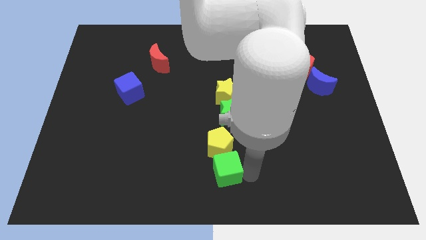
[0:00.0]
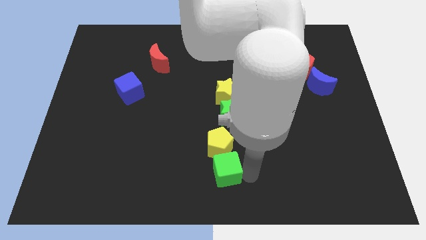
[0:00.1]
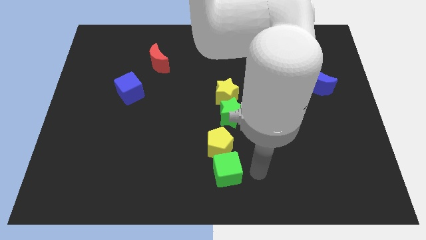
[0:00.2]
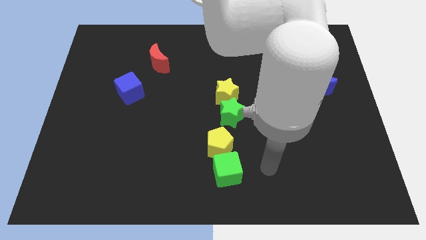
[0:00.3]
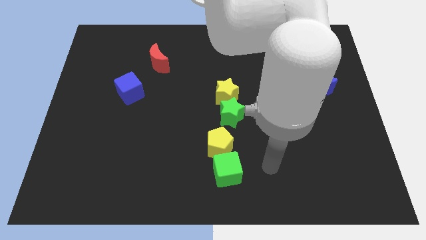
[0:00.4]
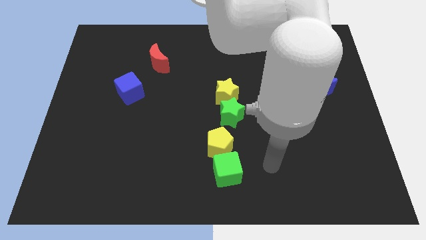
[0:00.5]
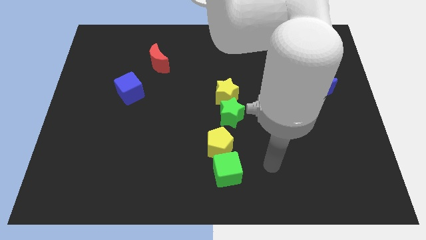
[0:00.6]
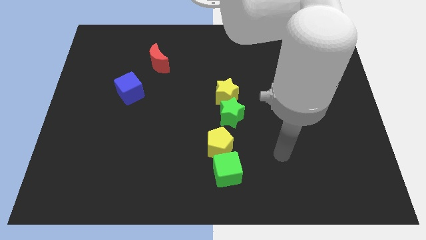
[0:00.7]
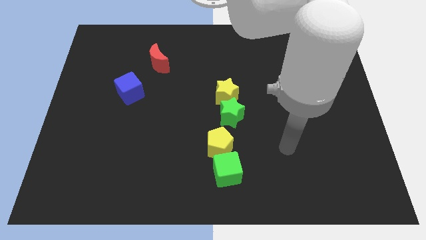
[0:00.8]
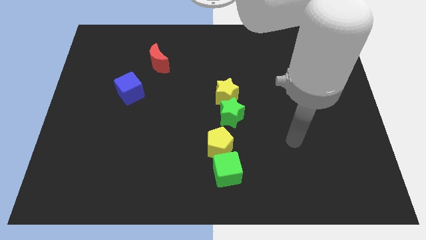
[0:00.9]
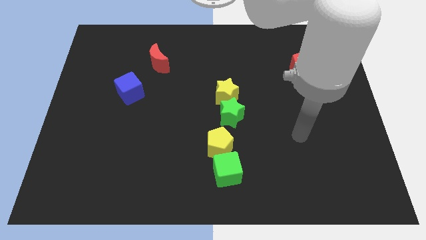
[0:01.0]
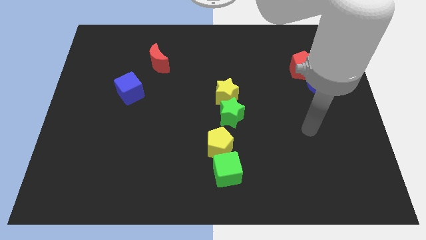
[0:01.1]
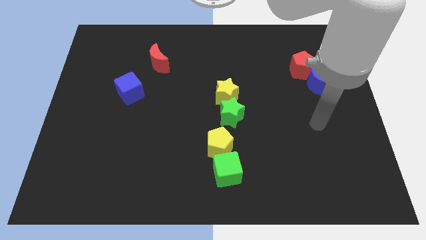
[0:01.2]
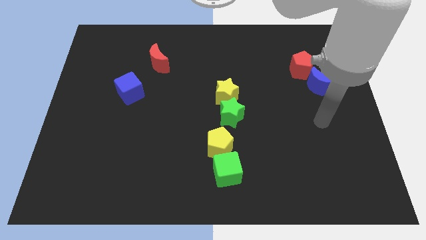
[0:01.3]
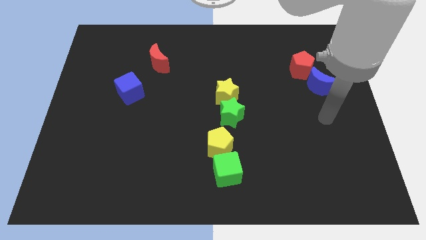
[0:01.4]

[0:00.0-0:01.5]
move your arm away from the green cube

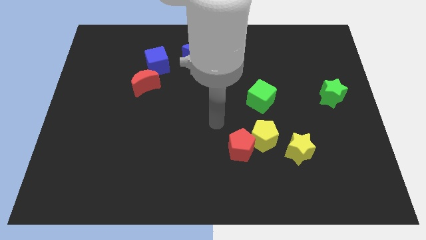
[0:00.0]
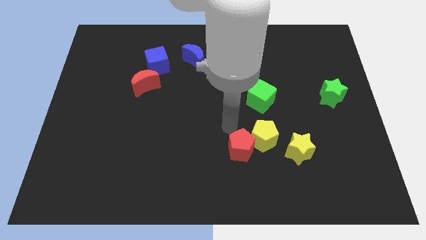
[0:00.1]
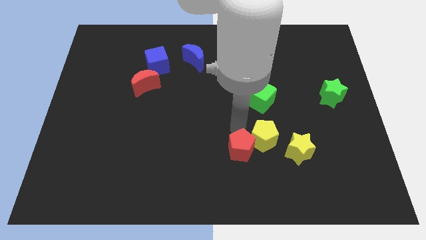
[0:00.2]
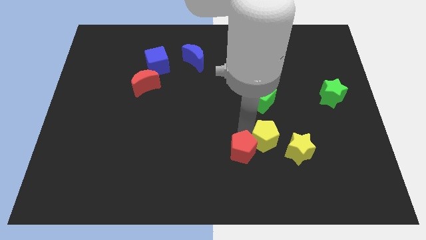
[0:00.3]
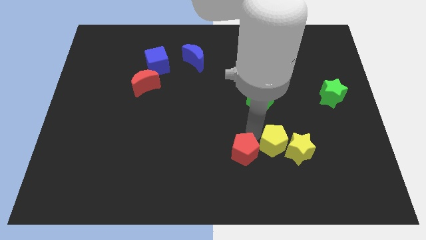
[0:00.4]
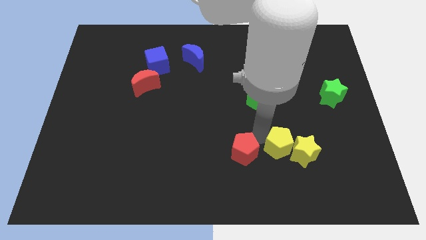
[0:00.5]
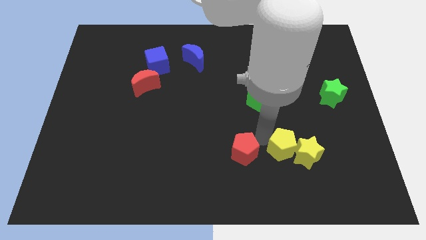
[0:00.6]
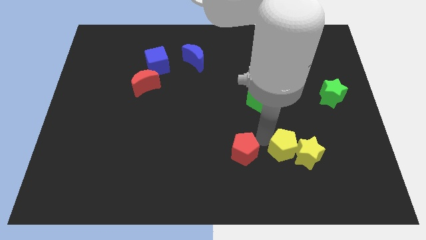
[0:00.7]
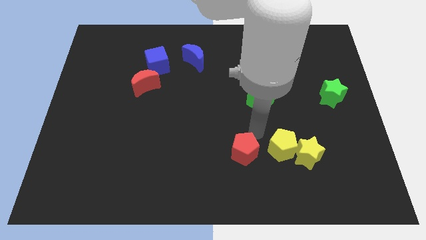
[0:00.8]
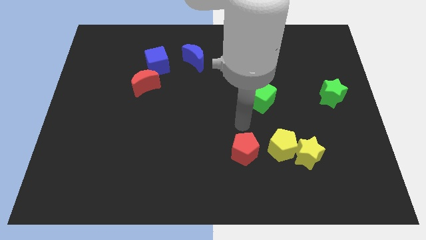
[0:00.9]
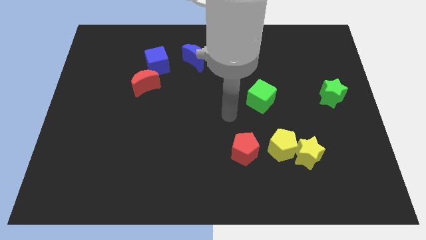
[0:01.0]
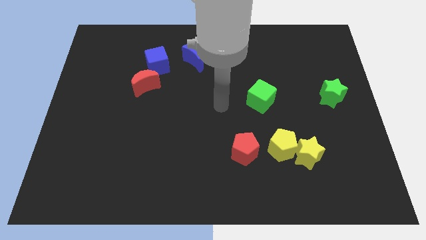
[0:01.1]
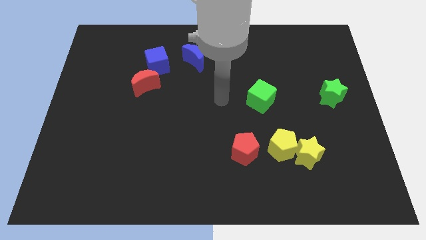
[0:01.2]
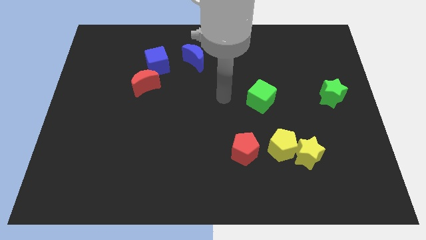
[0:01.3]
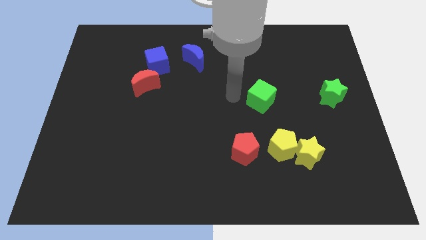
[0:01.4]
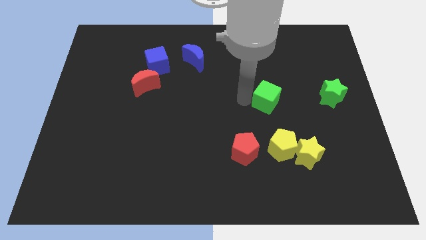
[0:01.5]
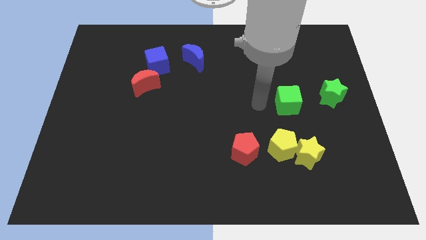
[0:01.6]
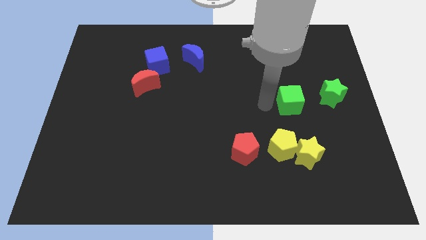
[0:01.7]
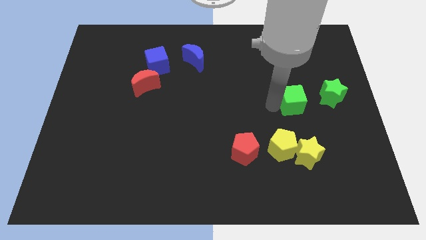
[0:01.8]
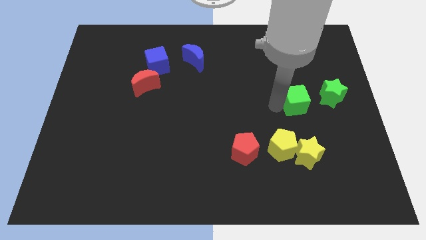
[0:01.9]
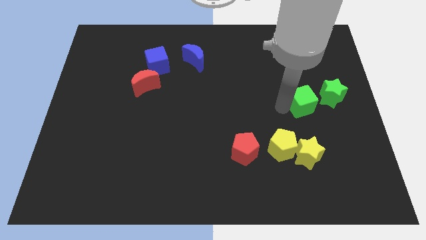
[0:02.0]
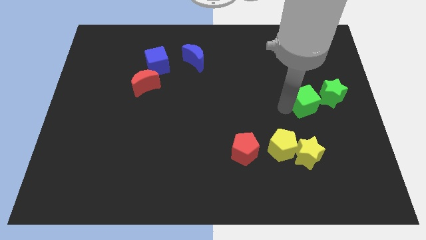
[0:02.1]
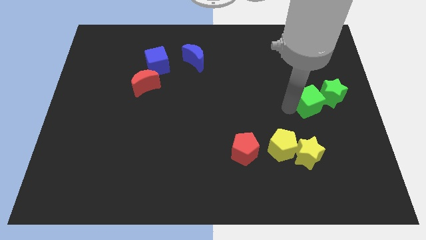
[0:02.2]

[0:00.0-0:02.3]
push the yellow pentagon into the yellow star

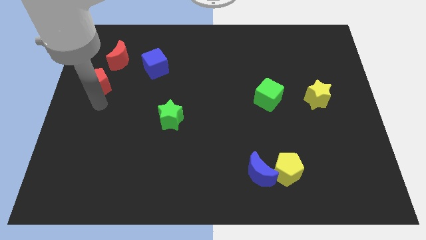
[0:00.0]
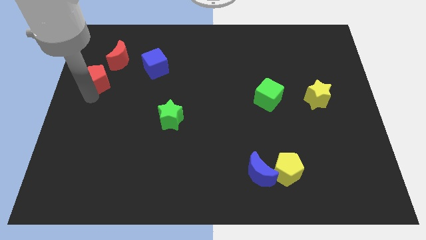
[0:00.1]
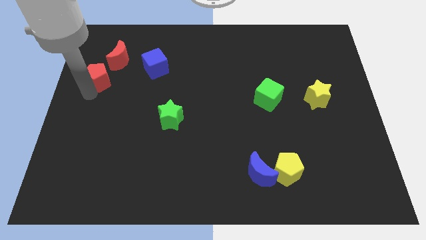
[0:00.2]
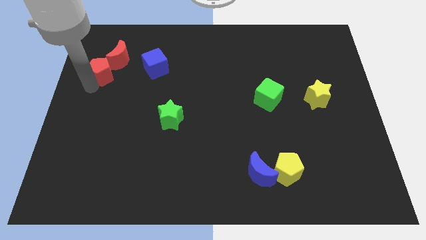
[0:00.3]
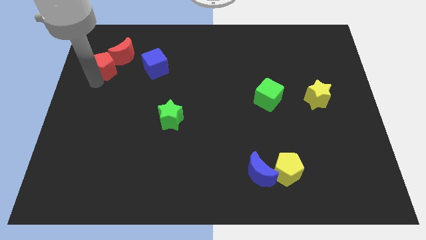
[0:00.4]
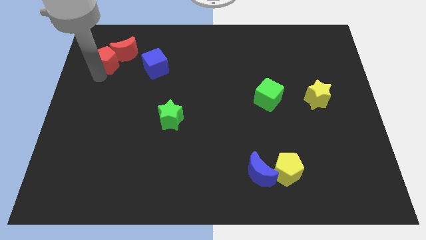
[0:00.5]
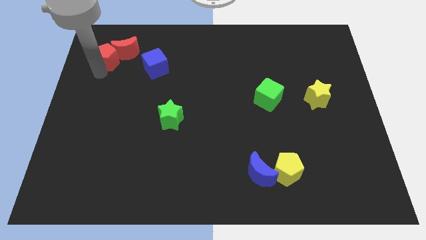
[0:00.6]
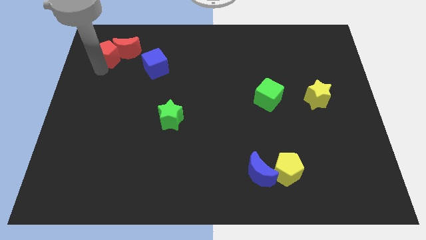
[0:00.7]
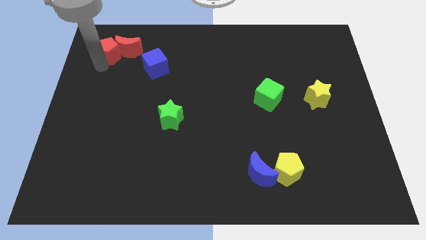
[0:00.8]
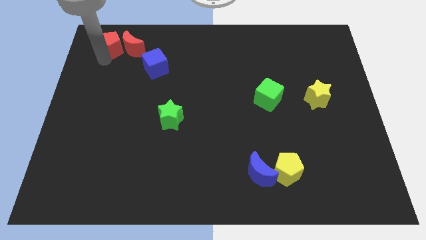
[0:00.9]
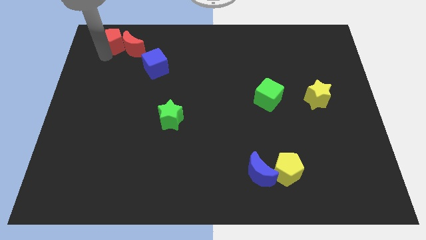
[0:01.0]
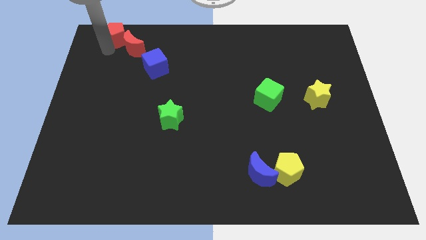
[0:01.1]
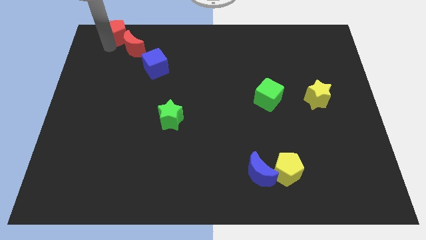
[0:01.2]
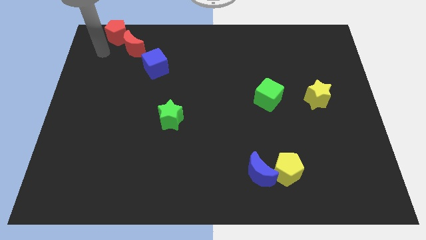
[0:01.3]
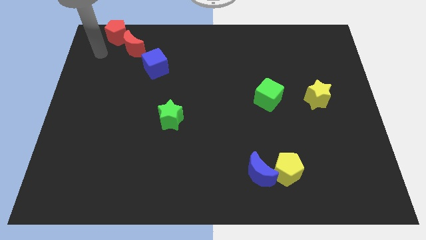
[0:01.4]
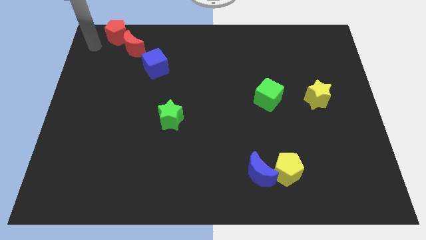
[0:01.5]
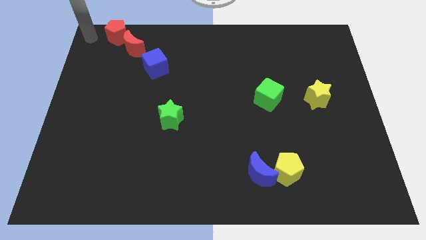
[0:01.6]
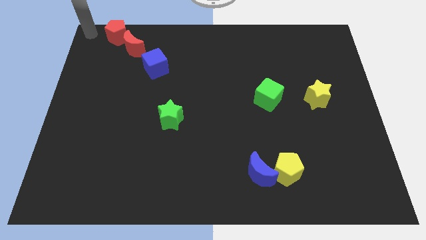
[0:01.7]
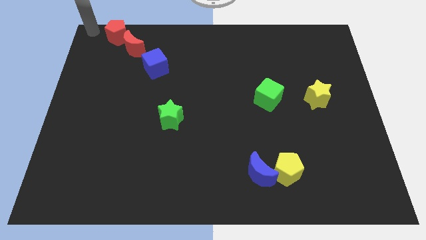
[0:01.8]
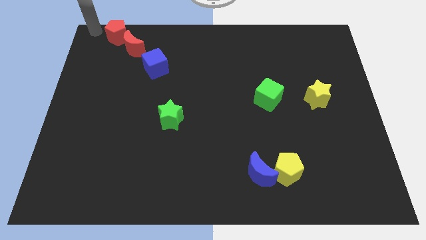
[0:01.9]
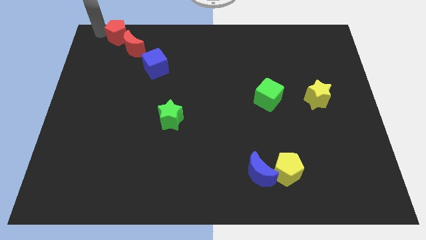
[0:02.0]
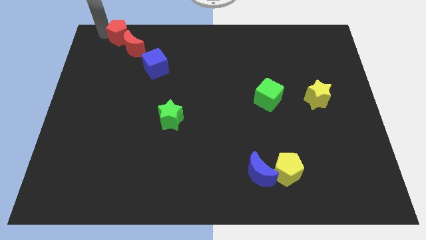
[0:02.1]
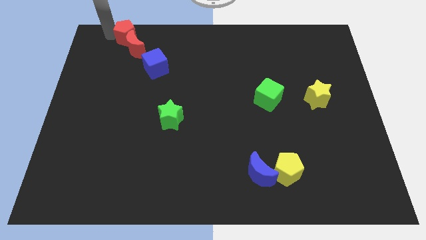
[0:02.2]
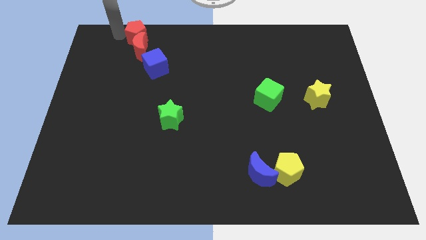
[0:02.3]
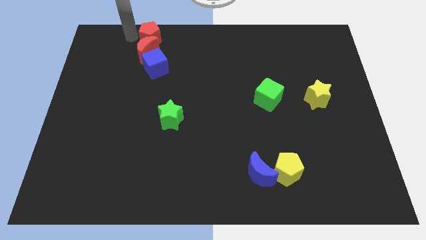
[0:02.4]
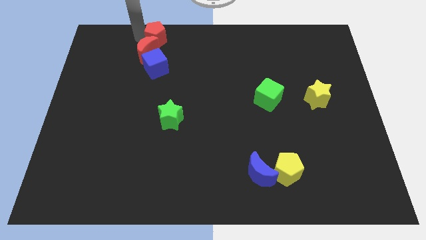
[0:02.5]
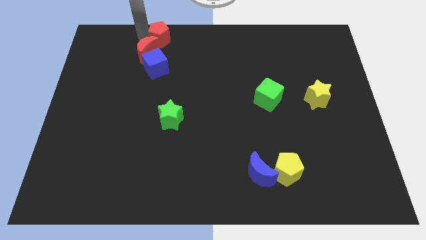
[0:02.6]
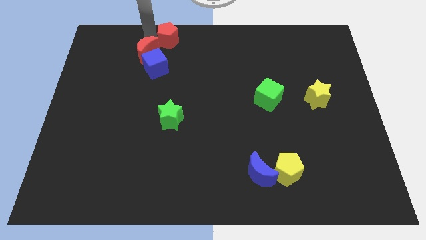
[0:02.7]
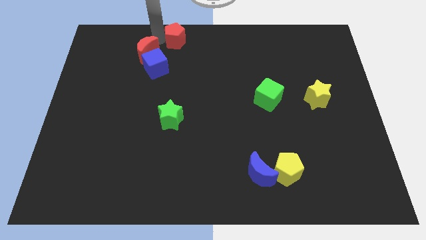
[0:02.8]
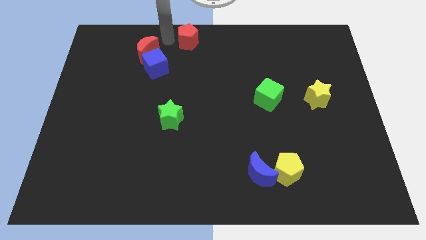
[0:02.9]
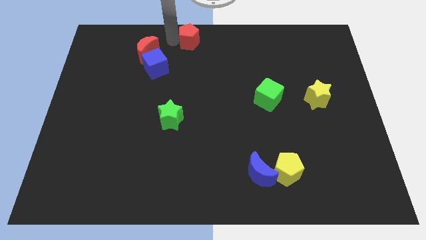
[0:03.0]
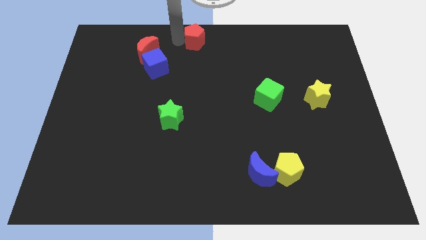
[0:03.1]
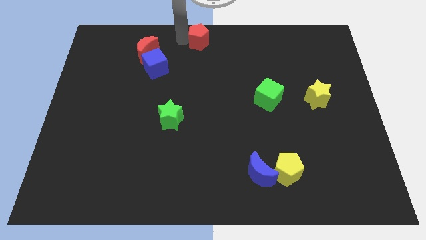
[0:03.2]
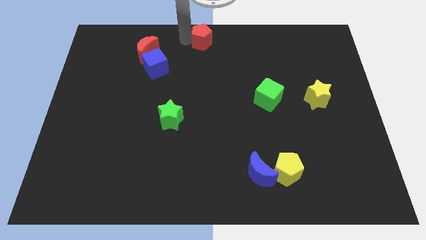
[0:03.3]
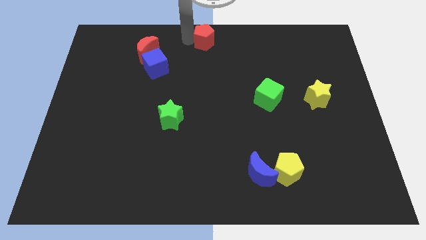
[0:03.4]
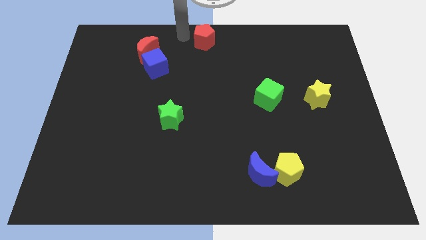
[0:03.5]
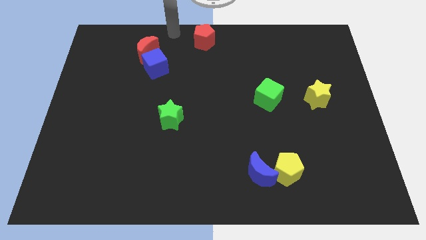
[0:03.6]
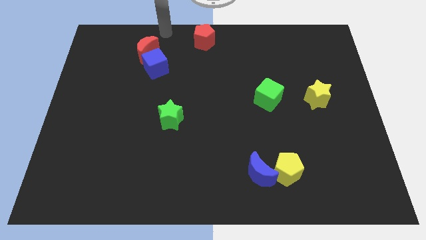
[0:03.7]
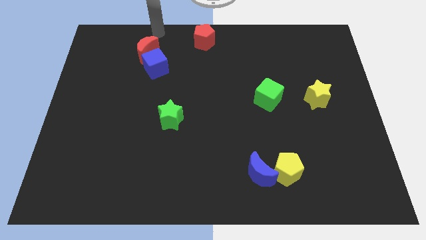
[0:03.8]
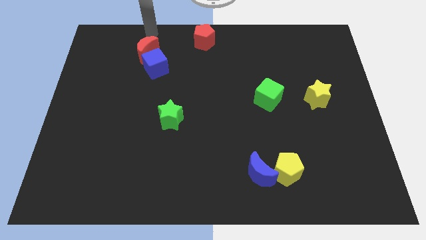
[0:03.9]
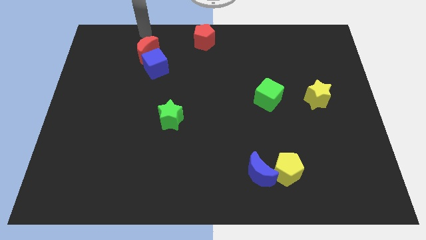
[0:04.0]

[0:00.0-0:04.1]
place the red pentagon at the top center of the board

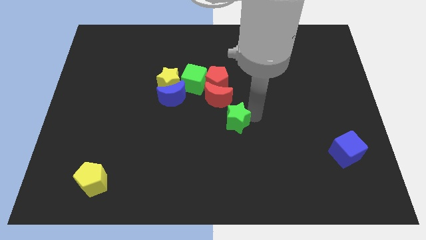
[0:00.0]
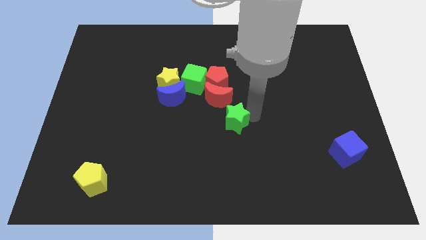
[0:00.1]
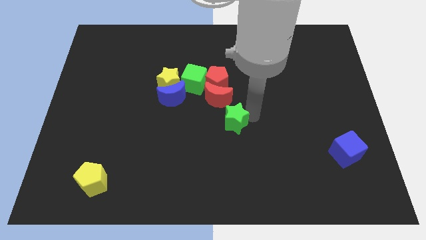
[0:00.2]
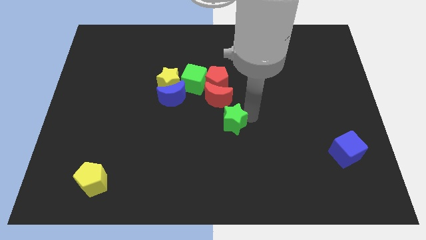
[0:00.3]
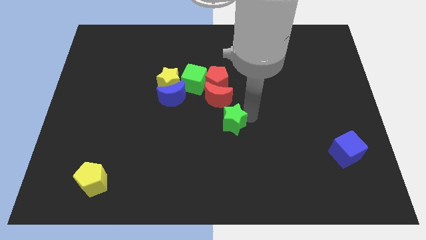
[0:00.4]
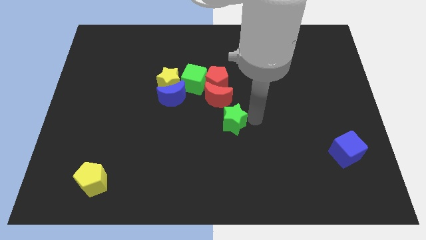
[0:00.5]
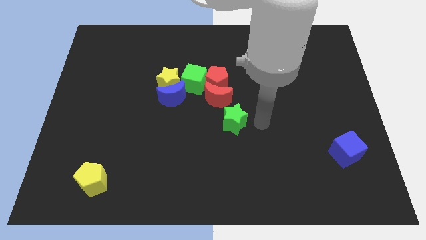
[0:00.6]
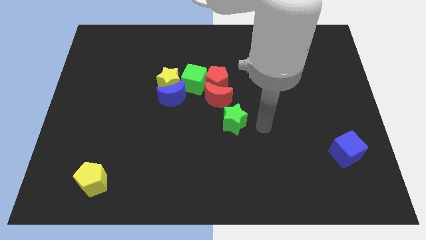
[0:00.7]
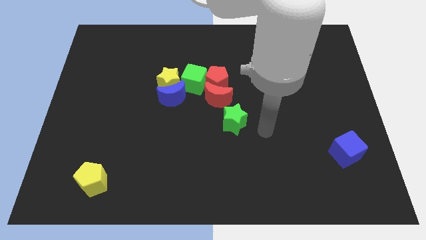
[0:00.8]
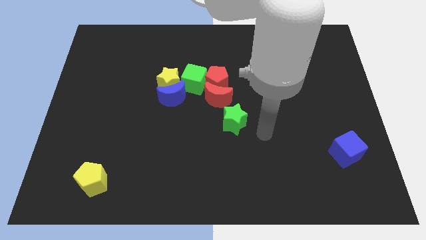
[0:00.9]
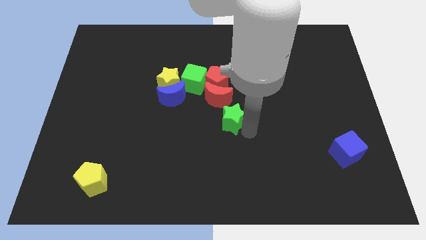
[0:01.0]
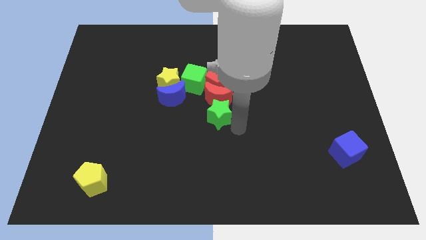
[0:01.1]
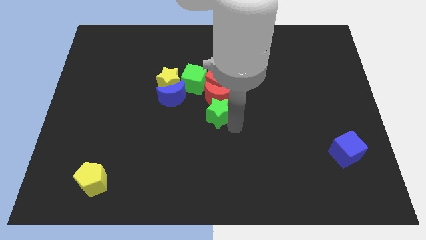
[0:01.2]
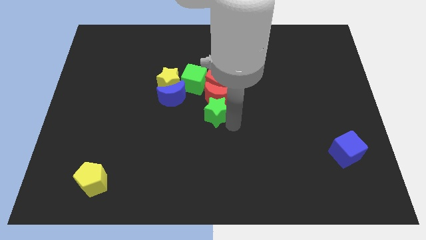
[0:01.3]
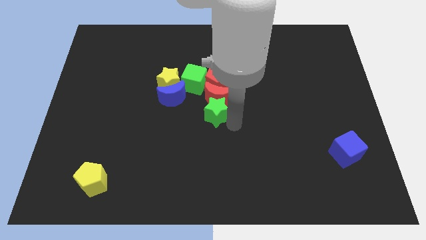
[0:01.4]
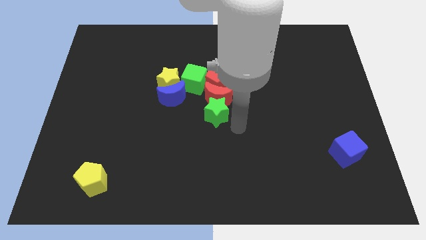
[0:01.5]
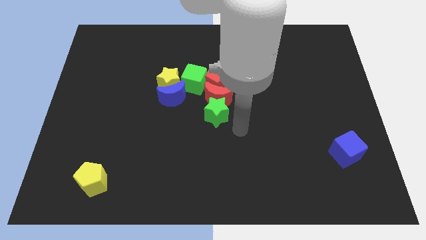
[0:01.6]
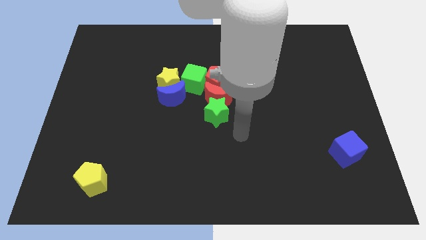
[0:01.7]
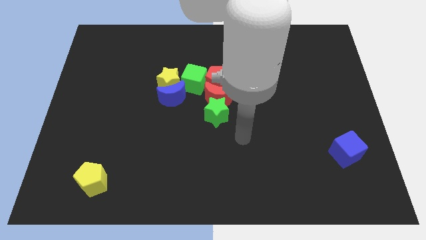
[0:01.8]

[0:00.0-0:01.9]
place the green star below the red crescent
